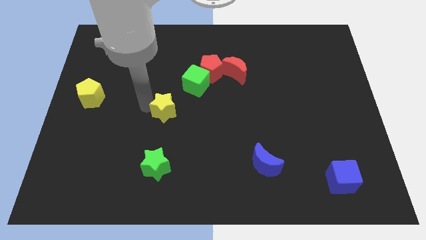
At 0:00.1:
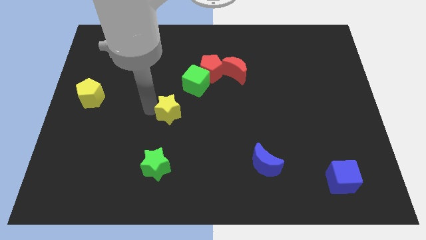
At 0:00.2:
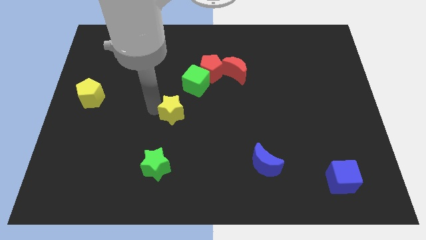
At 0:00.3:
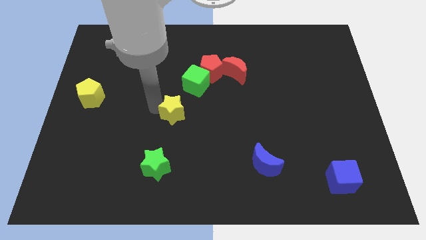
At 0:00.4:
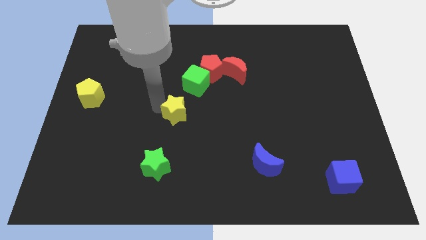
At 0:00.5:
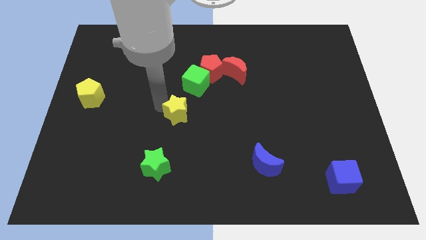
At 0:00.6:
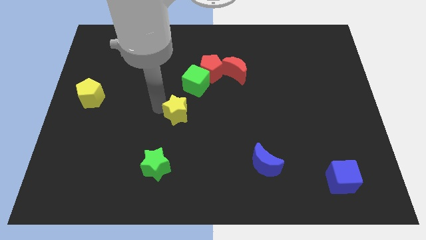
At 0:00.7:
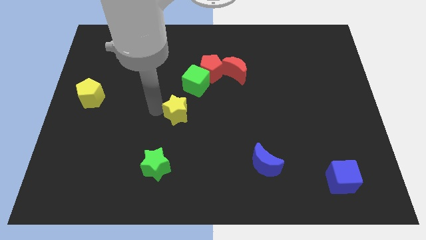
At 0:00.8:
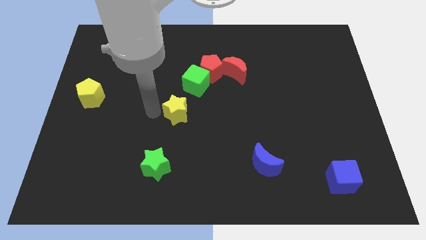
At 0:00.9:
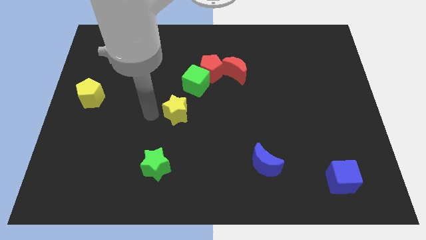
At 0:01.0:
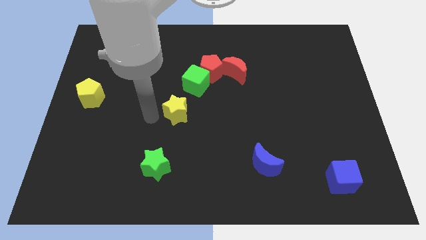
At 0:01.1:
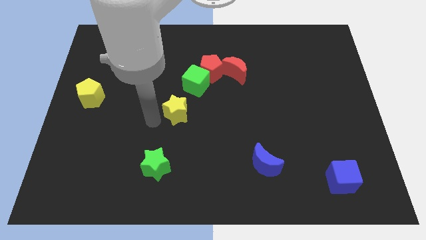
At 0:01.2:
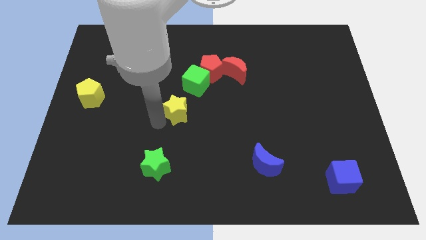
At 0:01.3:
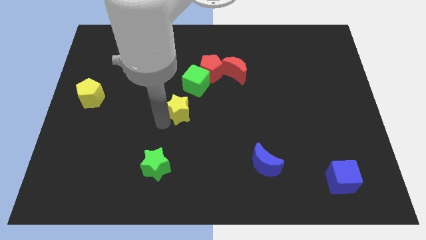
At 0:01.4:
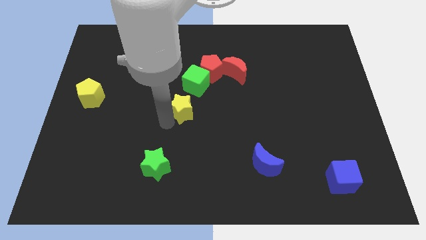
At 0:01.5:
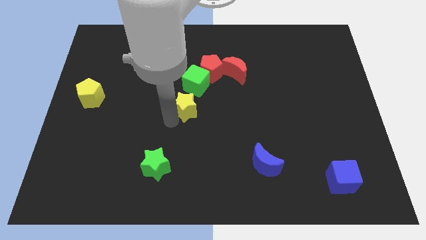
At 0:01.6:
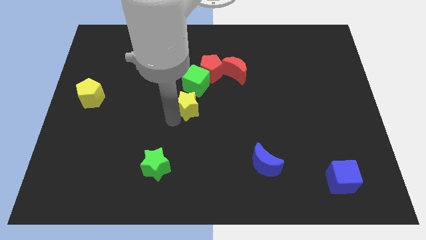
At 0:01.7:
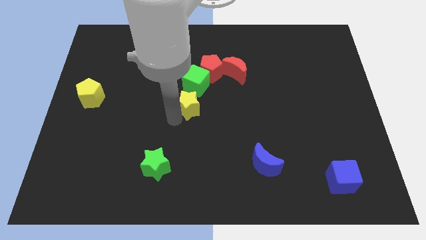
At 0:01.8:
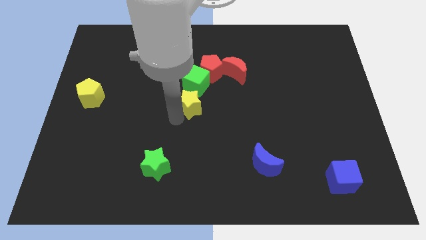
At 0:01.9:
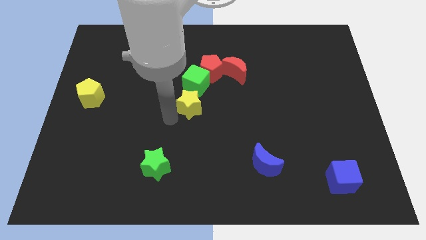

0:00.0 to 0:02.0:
place the yellow star at the bottom of the green cube

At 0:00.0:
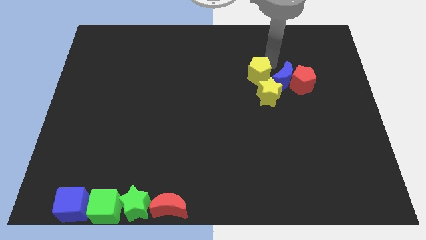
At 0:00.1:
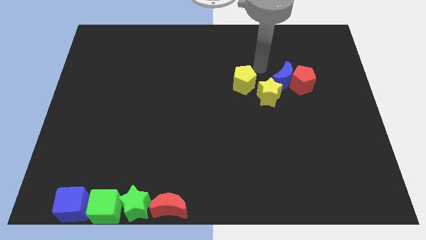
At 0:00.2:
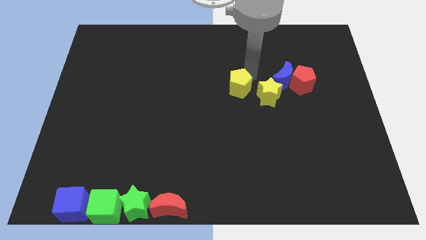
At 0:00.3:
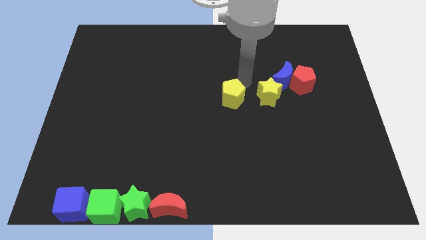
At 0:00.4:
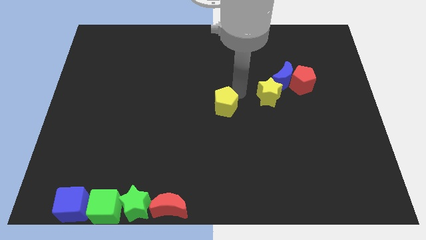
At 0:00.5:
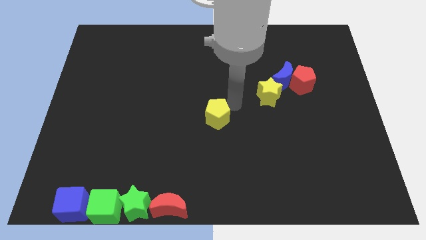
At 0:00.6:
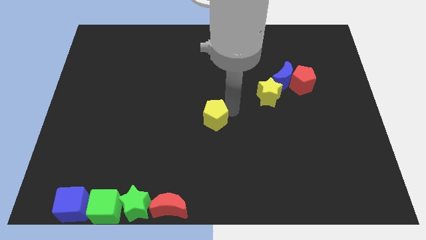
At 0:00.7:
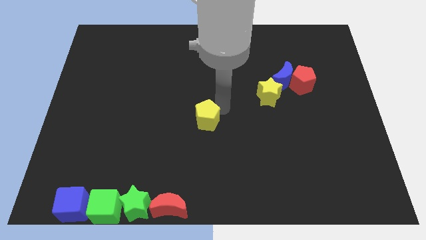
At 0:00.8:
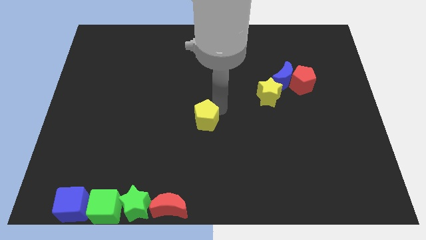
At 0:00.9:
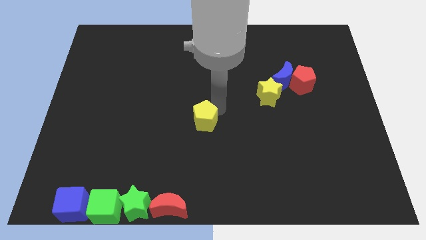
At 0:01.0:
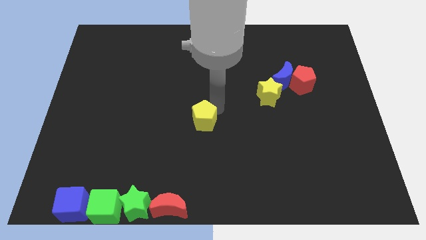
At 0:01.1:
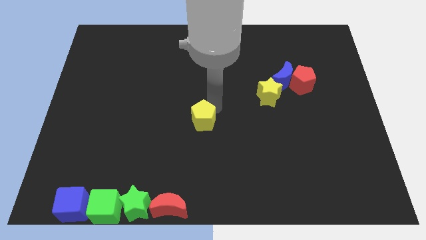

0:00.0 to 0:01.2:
push the yellow pentagon to the center of the board

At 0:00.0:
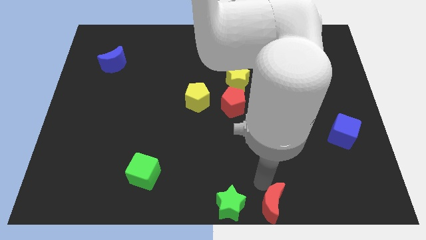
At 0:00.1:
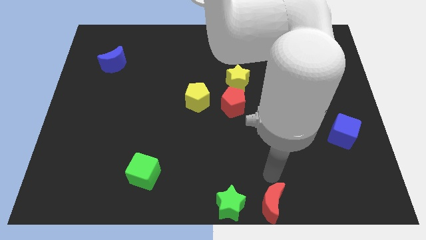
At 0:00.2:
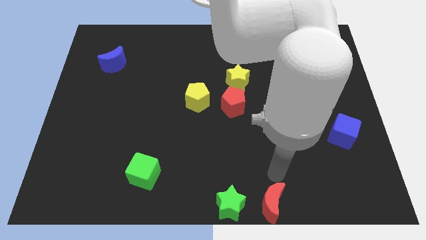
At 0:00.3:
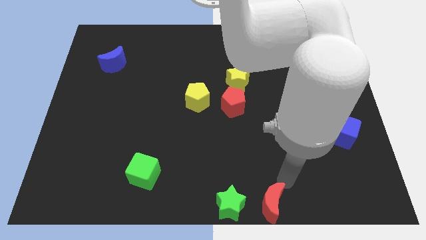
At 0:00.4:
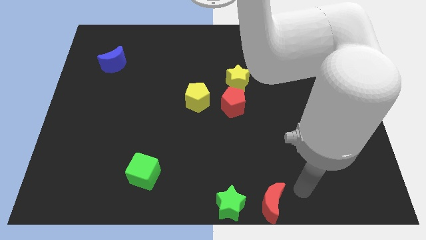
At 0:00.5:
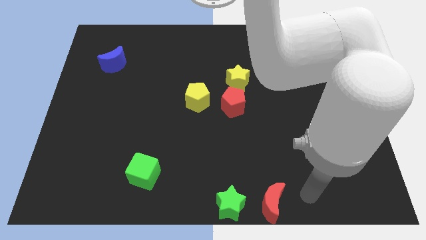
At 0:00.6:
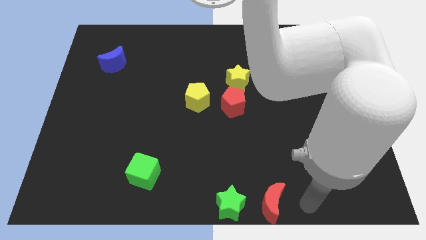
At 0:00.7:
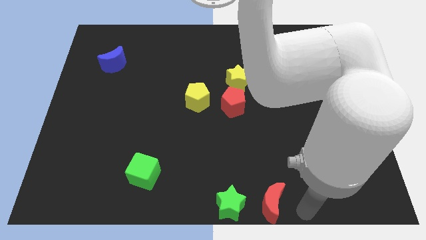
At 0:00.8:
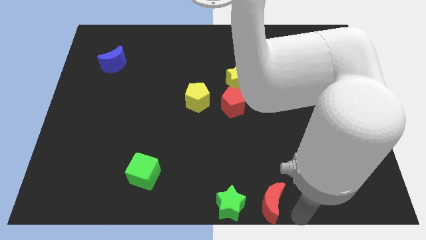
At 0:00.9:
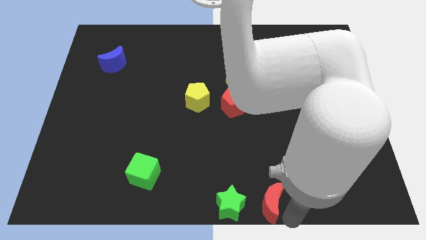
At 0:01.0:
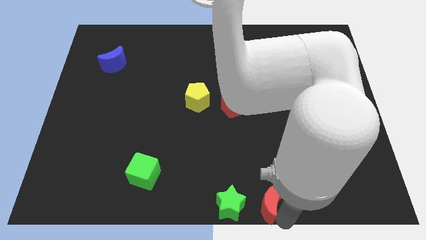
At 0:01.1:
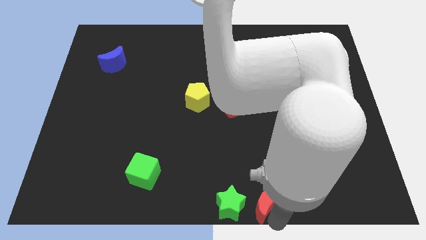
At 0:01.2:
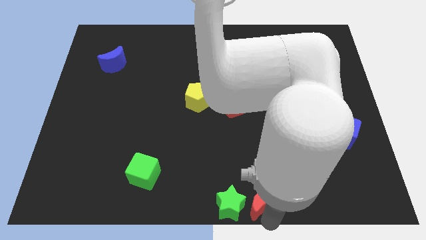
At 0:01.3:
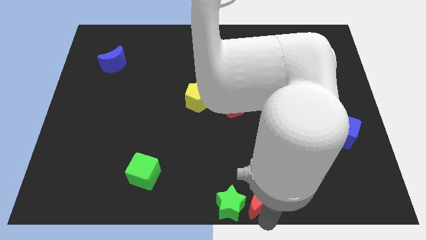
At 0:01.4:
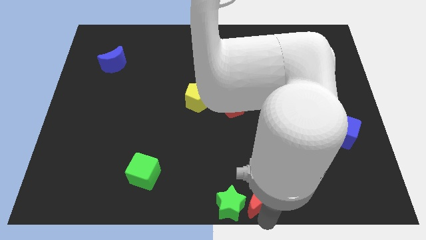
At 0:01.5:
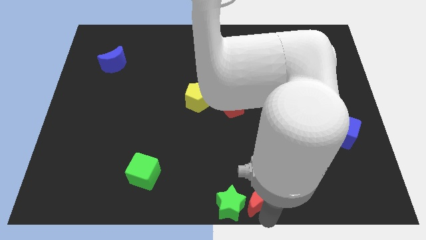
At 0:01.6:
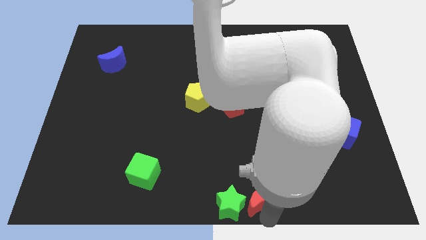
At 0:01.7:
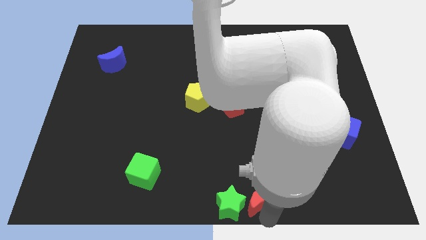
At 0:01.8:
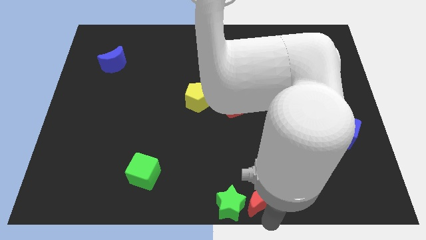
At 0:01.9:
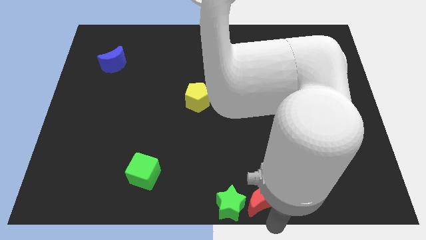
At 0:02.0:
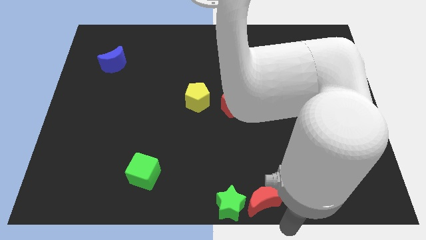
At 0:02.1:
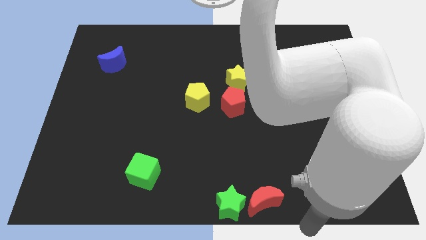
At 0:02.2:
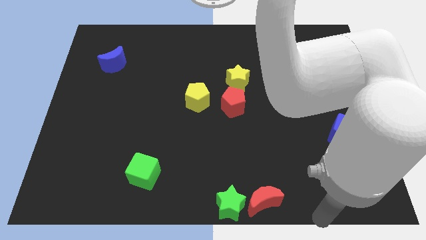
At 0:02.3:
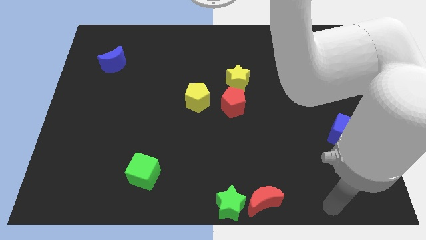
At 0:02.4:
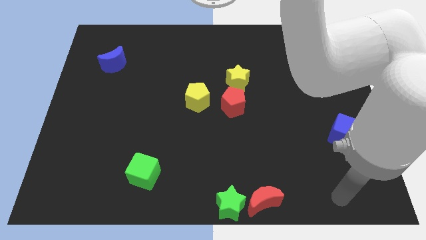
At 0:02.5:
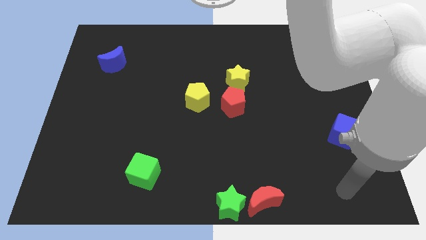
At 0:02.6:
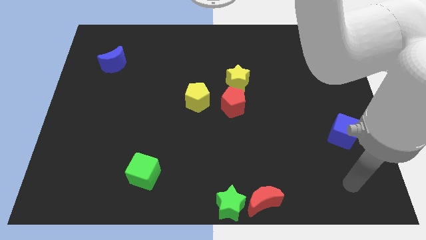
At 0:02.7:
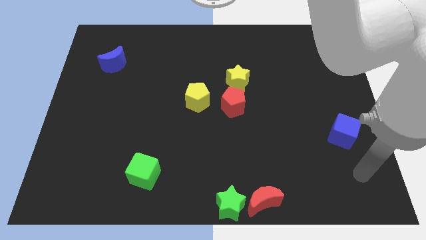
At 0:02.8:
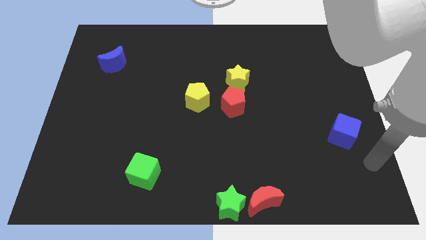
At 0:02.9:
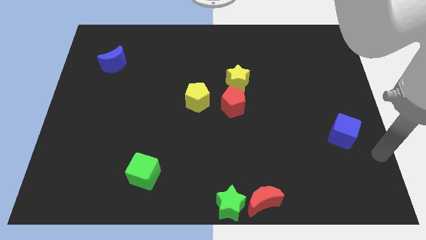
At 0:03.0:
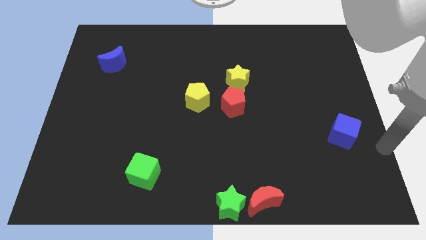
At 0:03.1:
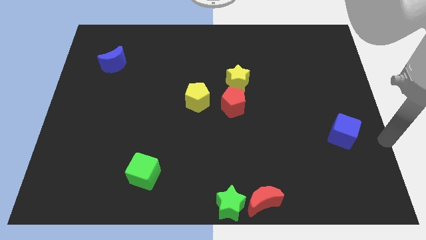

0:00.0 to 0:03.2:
place the red moon to the right of the green star

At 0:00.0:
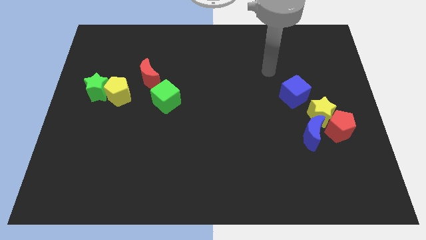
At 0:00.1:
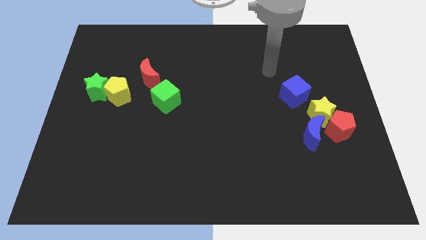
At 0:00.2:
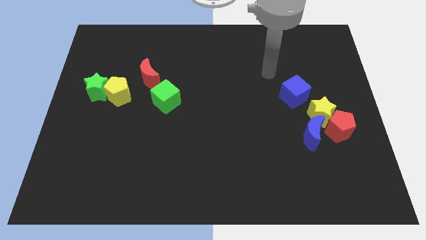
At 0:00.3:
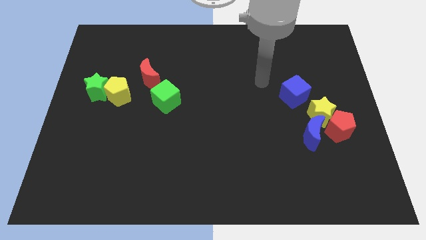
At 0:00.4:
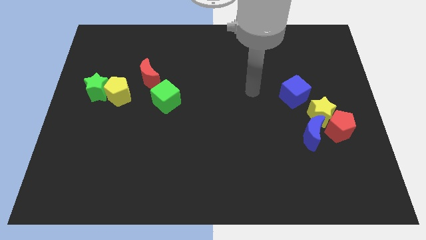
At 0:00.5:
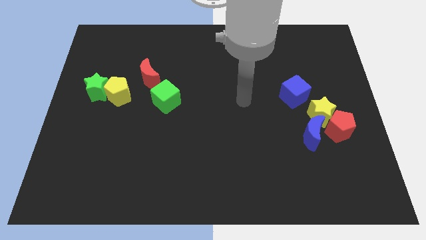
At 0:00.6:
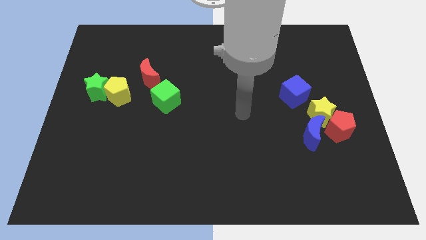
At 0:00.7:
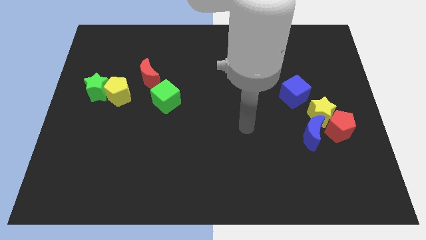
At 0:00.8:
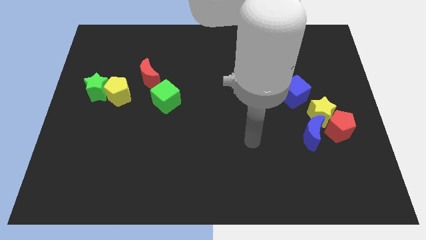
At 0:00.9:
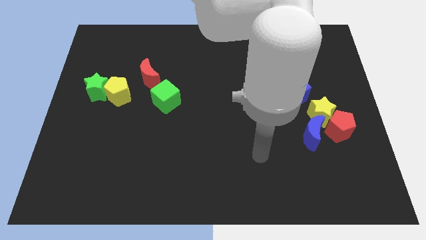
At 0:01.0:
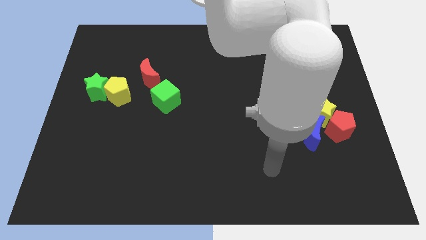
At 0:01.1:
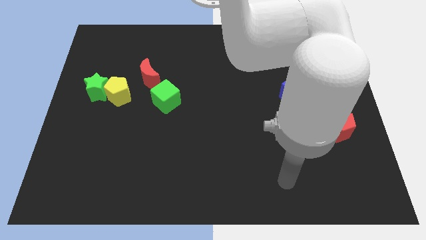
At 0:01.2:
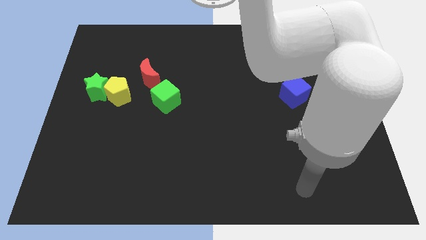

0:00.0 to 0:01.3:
go to the bottom side of the table

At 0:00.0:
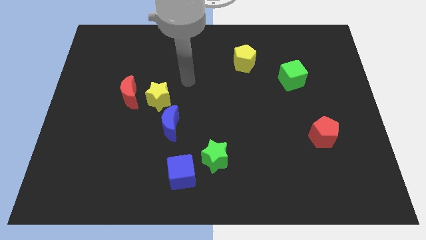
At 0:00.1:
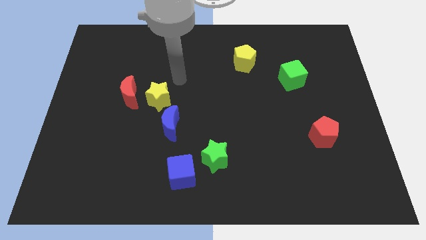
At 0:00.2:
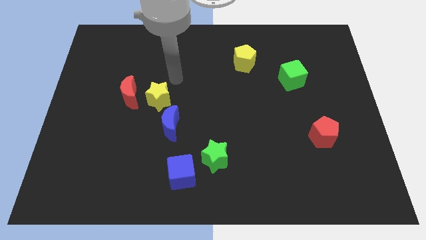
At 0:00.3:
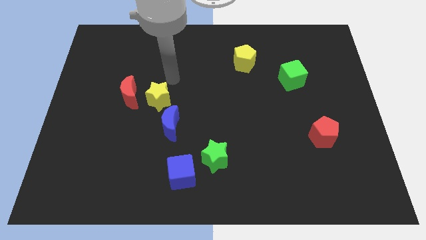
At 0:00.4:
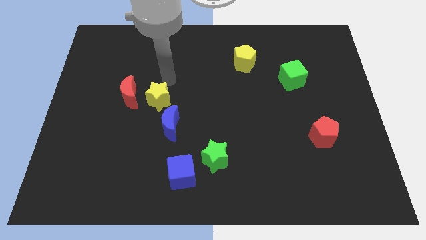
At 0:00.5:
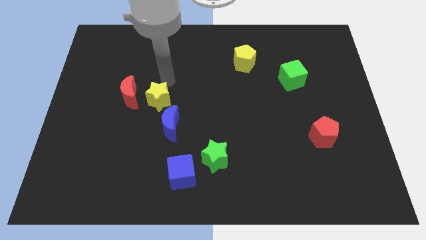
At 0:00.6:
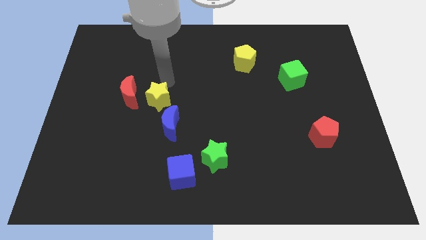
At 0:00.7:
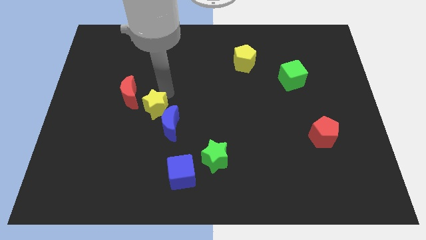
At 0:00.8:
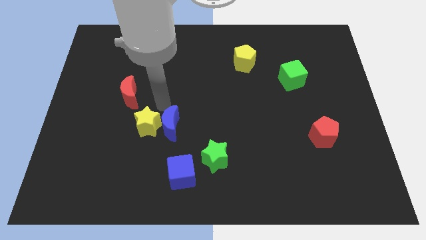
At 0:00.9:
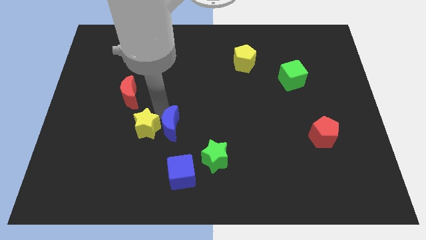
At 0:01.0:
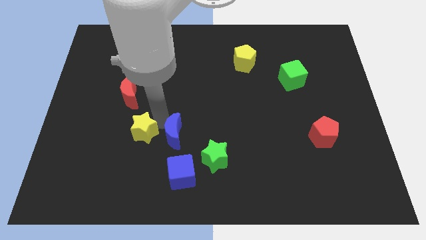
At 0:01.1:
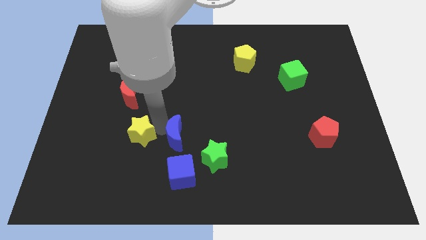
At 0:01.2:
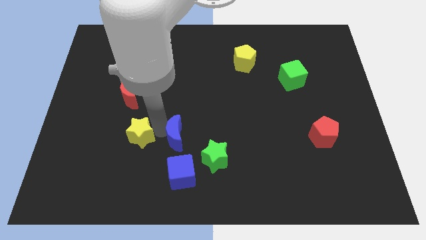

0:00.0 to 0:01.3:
slightly push the yellow star and blue moon towards the bottom side
